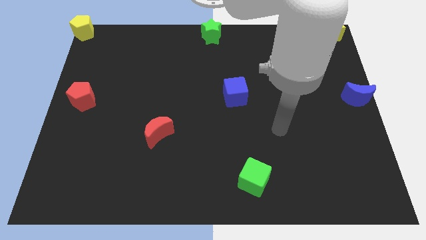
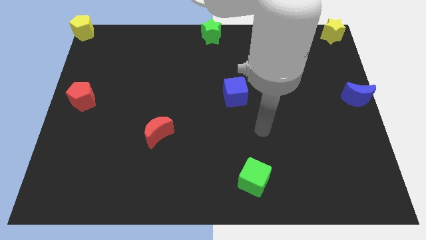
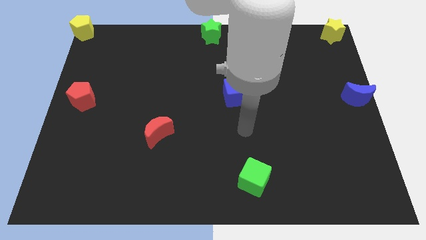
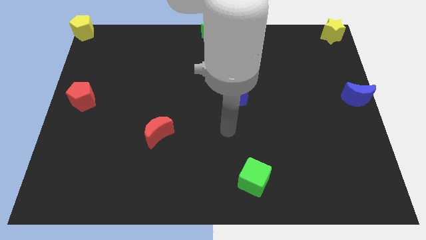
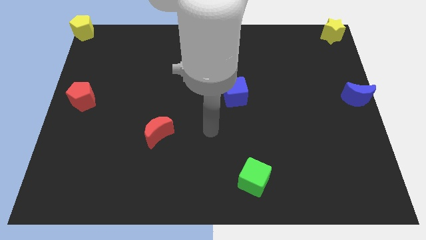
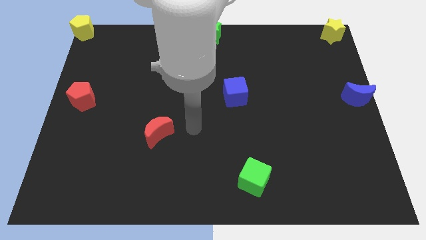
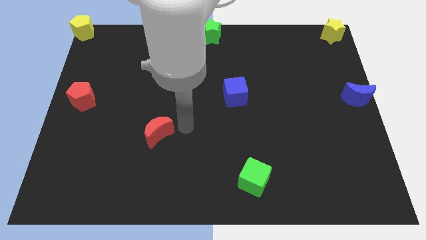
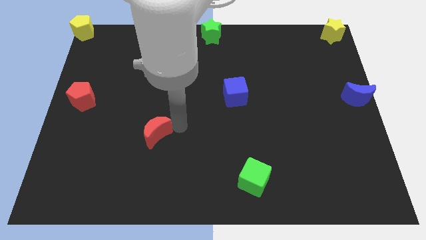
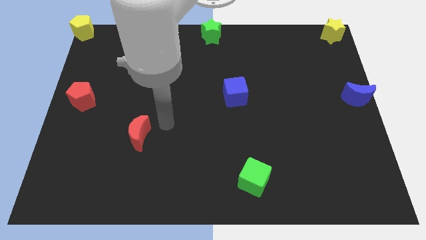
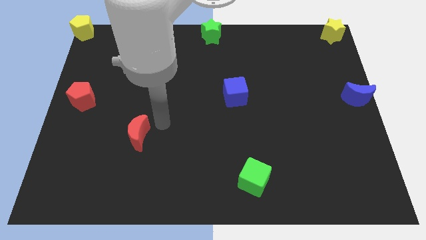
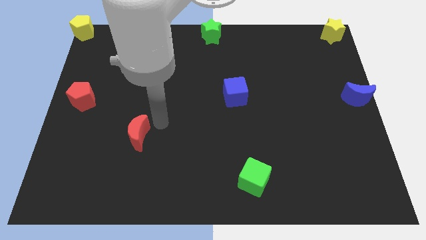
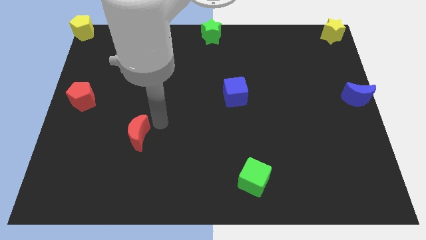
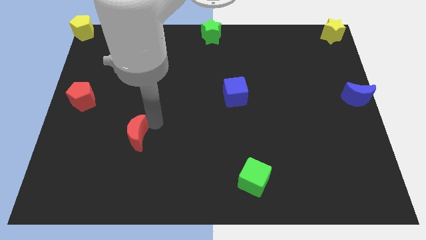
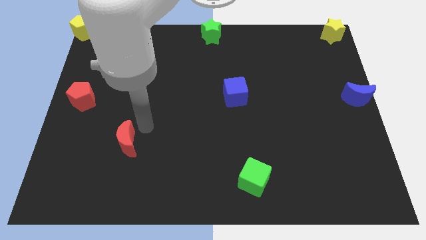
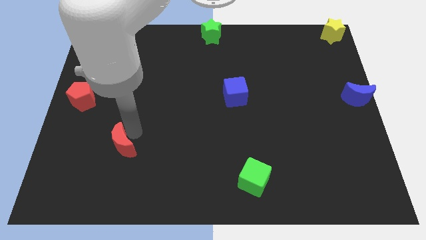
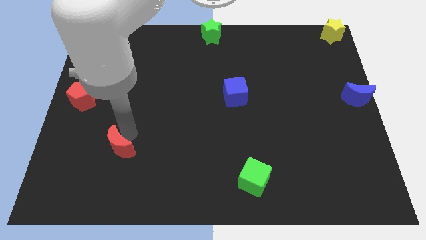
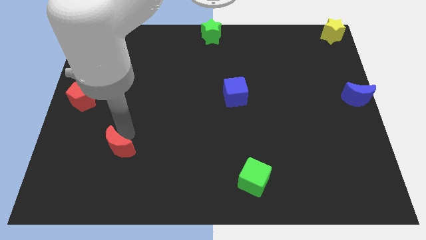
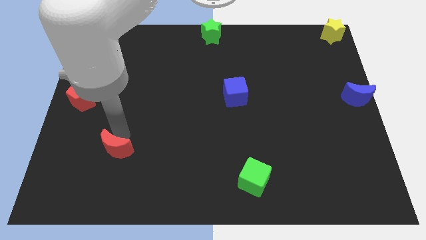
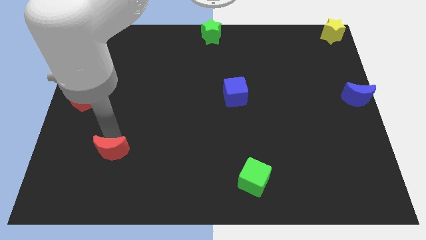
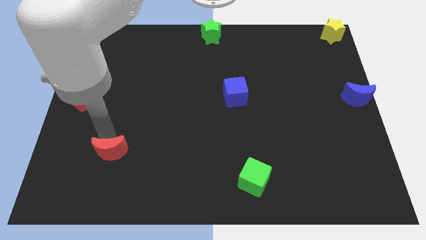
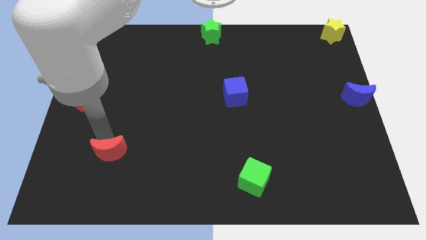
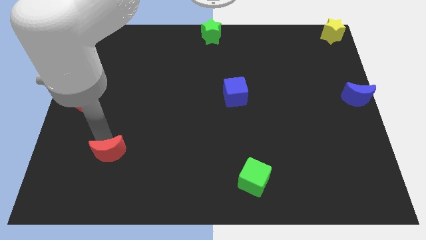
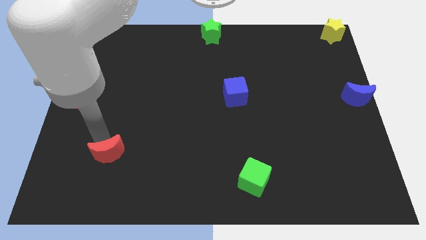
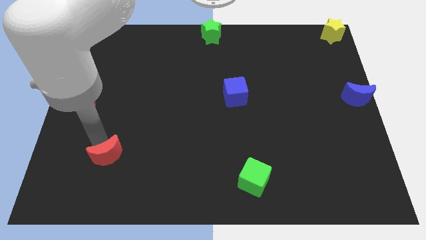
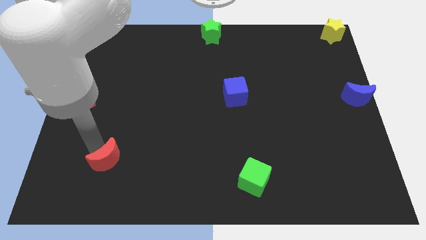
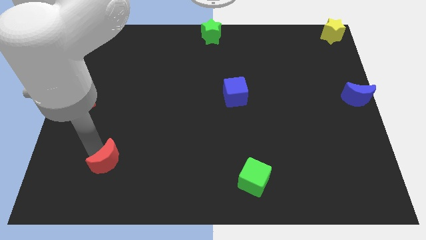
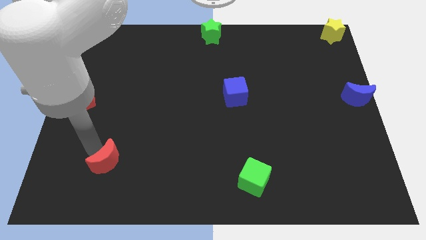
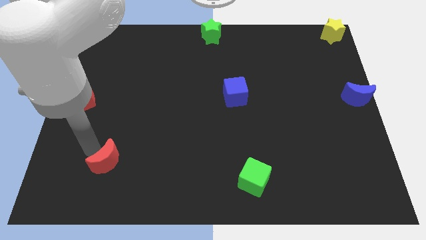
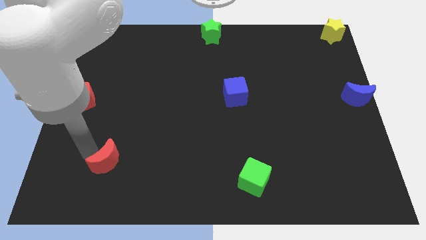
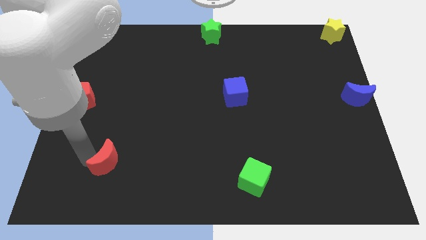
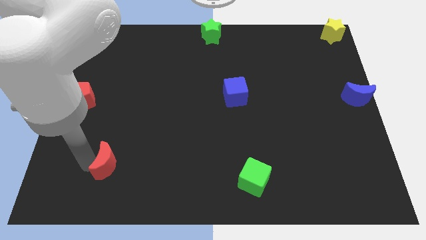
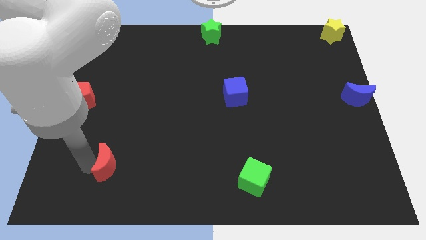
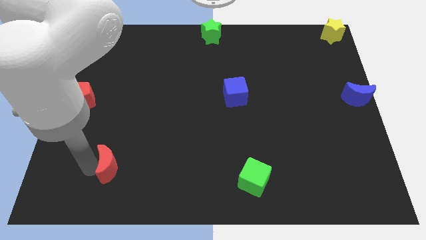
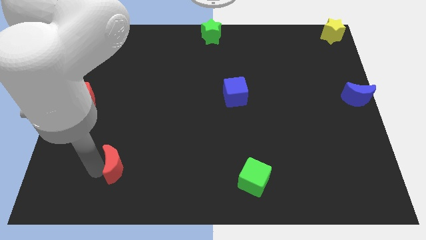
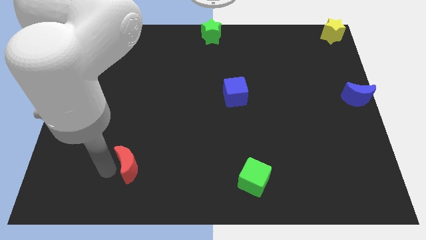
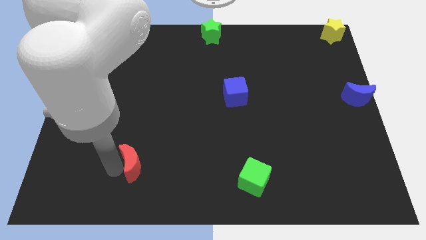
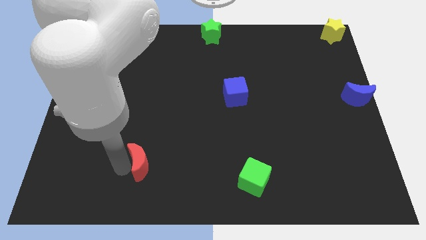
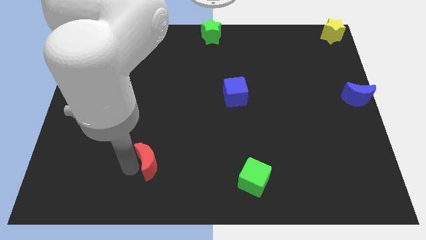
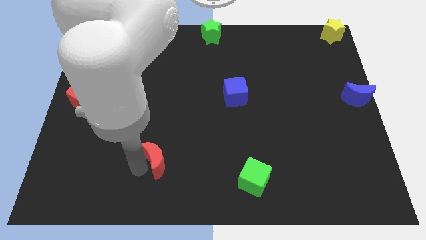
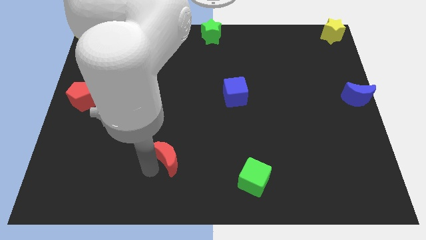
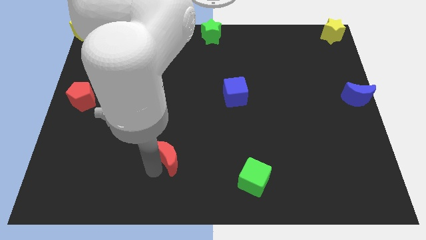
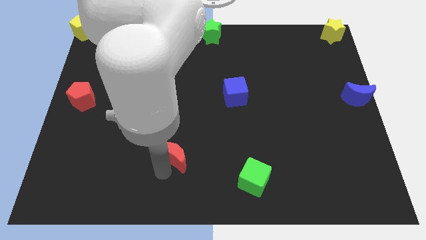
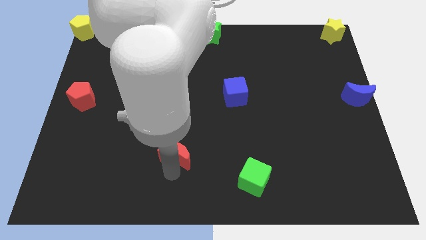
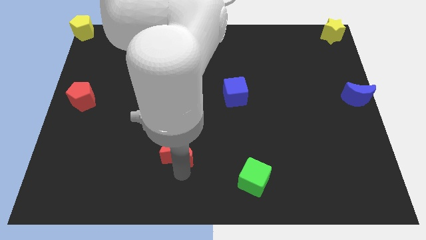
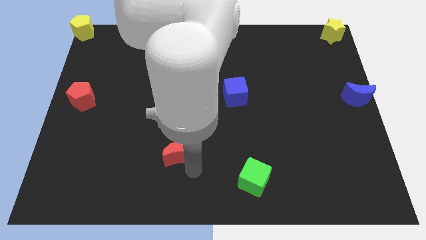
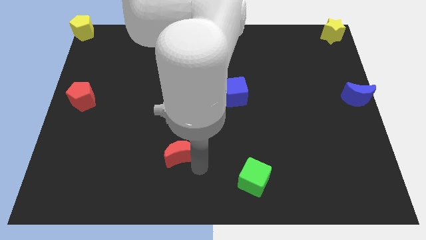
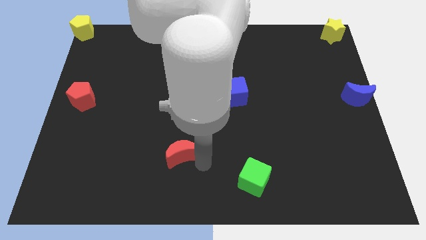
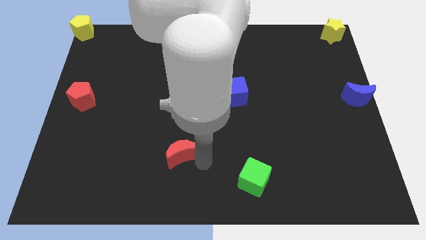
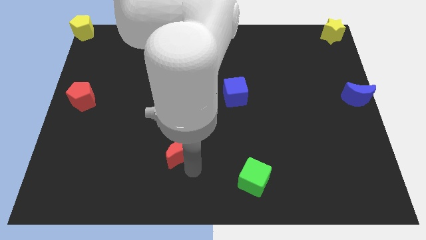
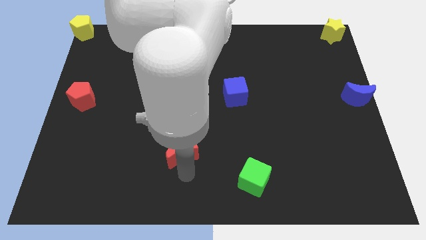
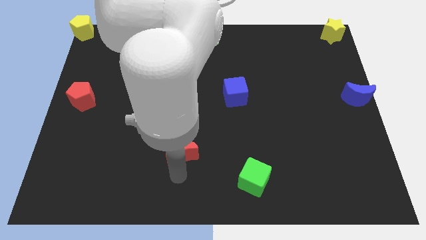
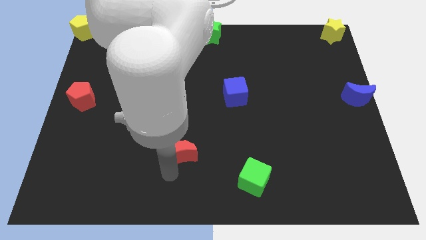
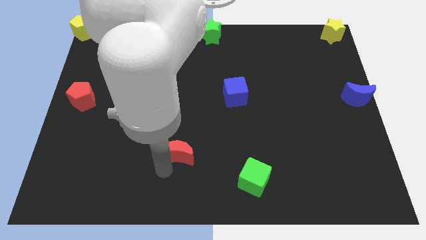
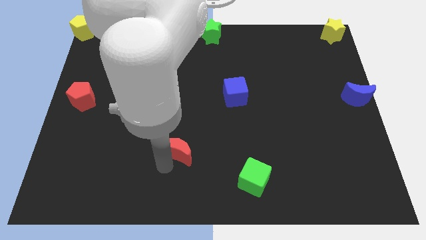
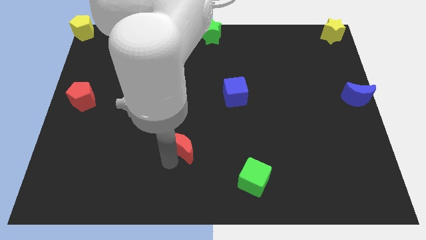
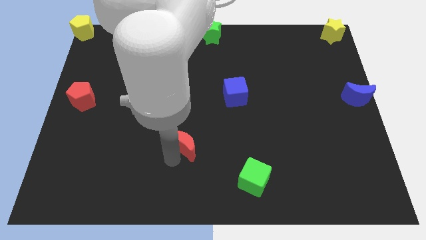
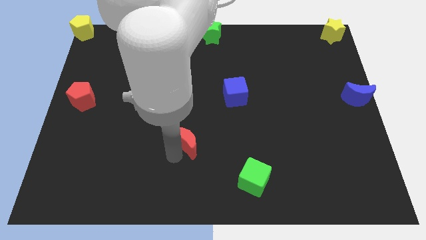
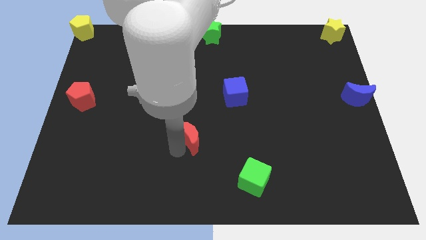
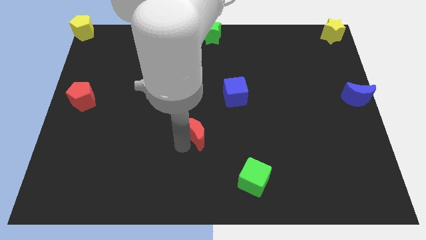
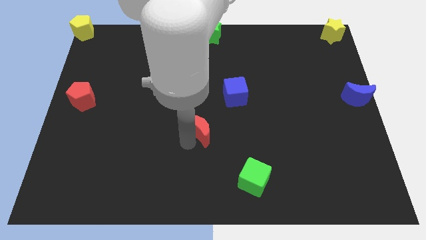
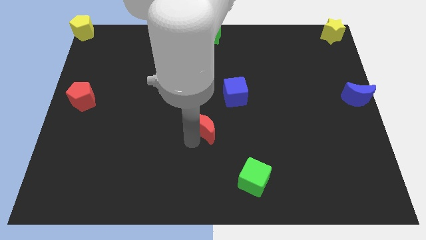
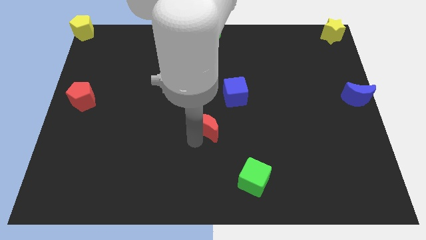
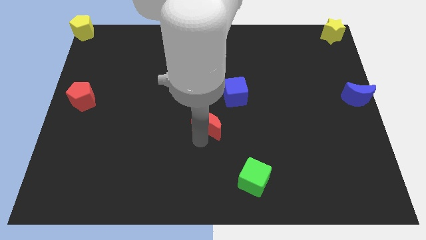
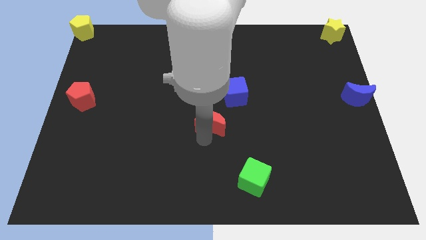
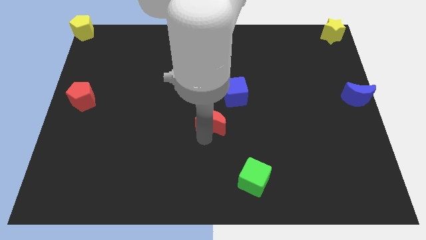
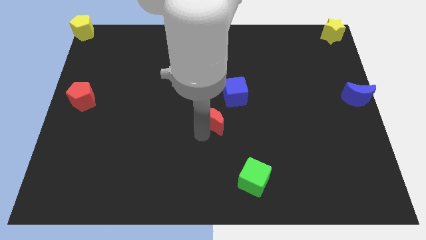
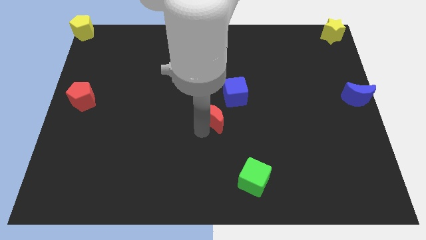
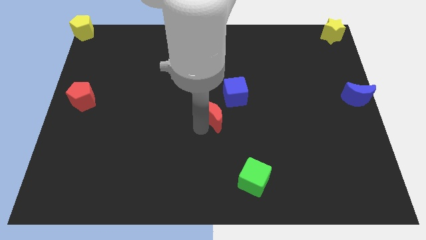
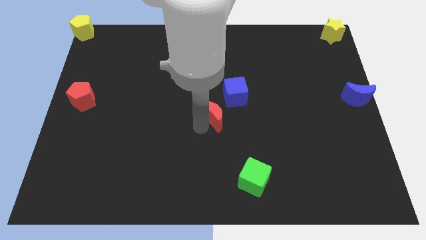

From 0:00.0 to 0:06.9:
place the red moon at the bottom left side of blue cube

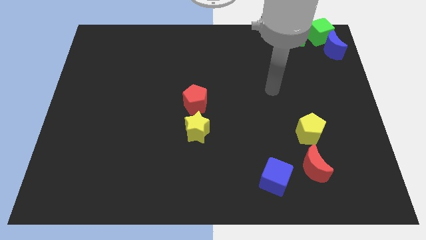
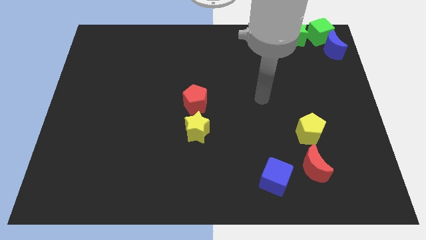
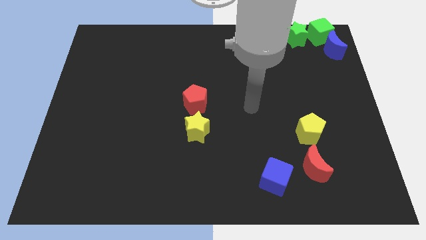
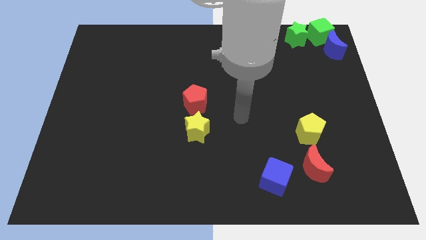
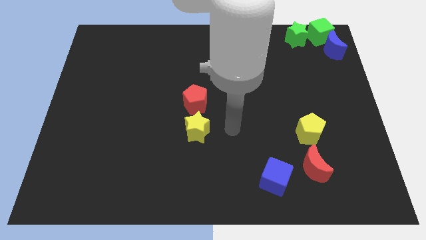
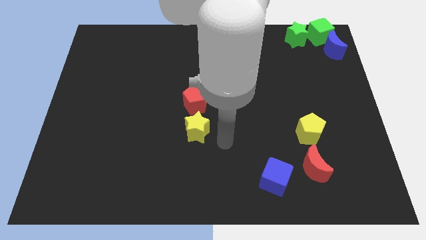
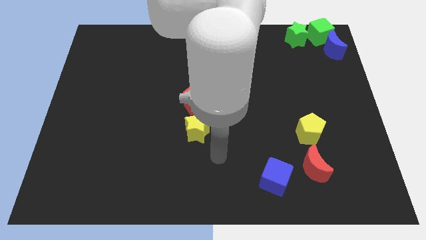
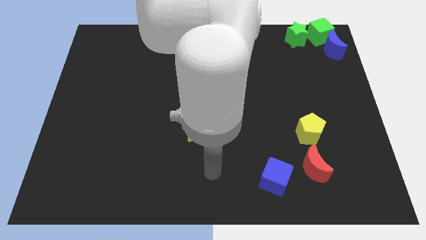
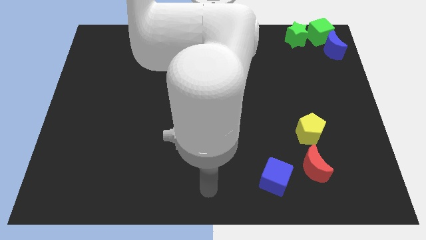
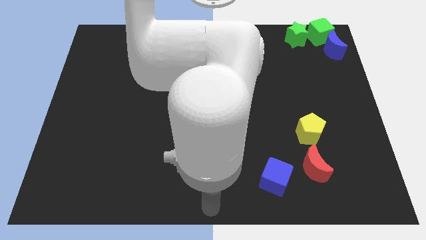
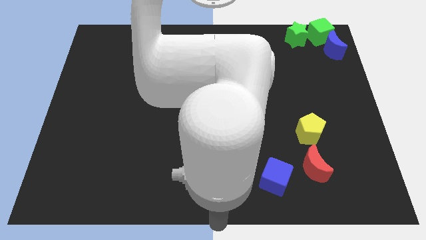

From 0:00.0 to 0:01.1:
point your arm at the bottom center of the board

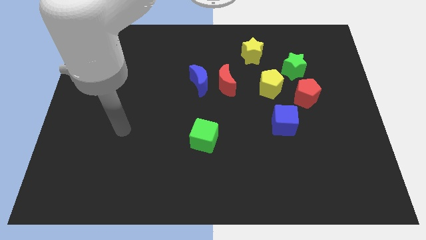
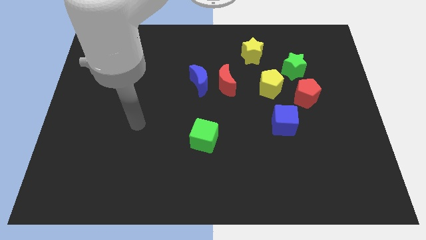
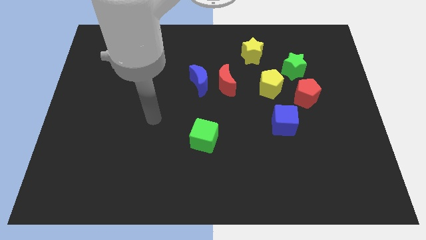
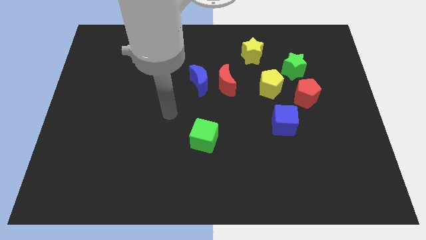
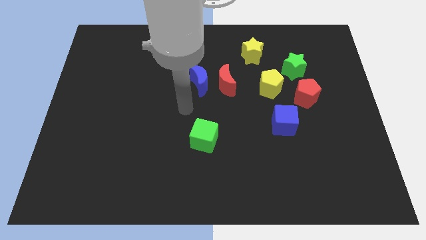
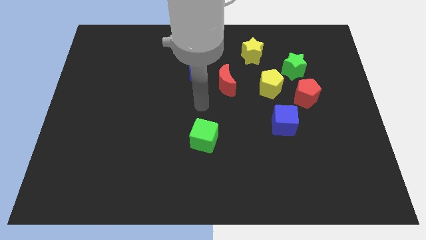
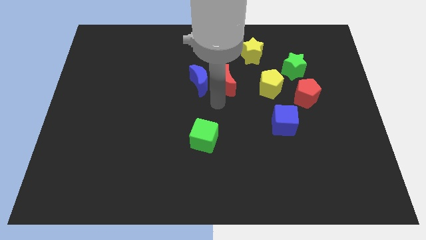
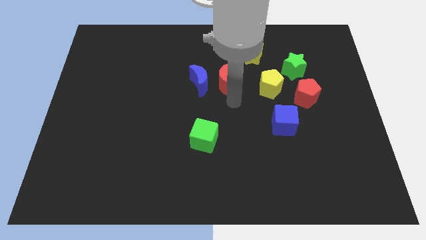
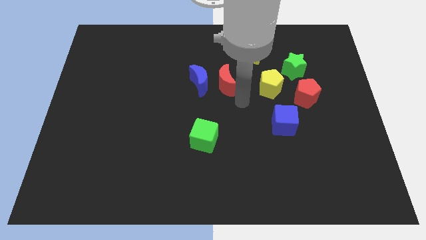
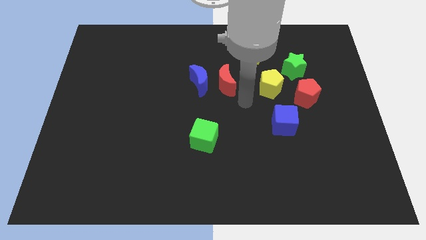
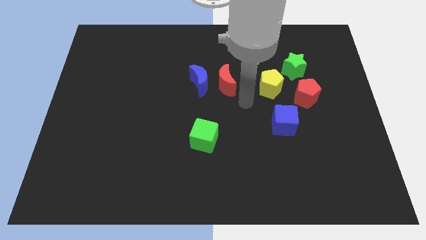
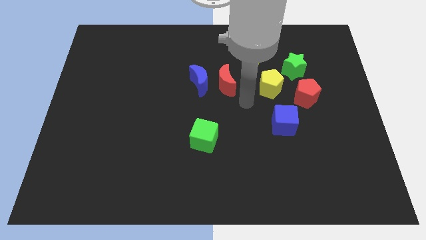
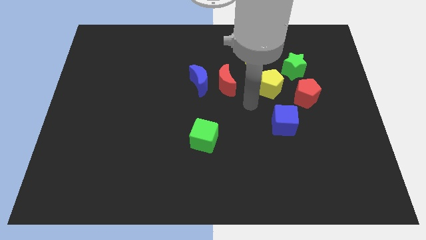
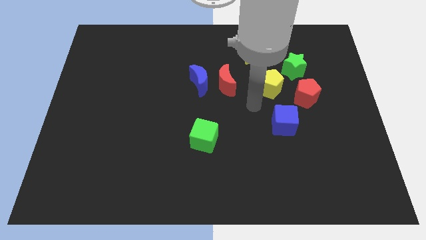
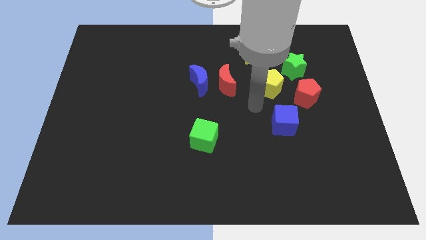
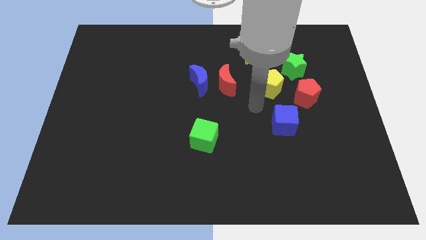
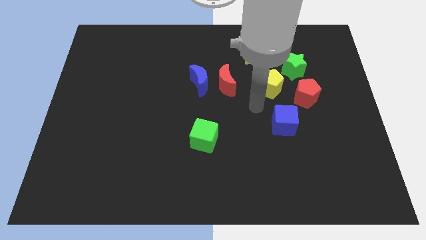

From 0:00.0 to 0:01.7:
place your hand diagonally top right to the green cube
